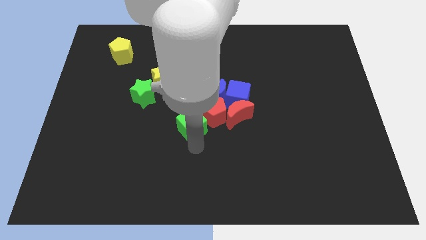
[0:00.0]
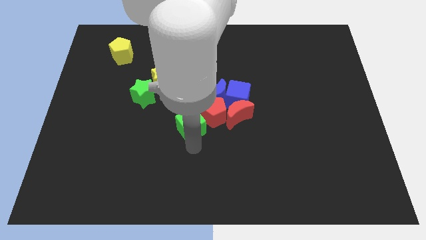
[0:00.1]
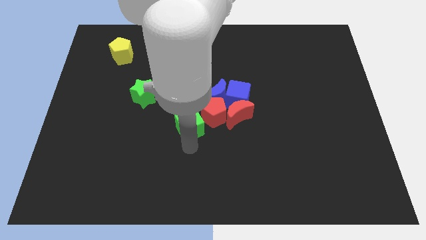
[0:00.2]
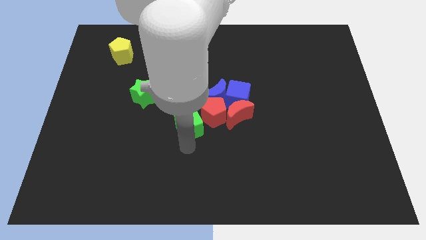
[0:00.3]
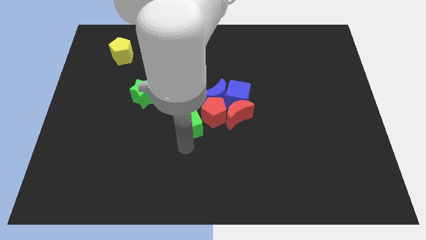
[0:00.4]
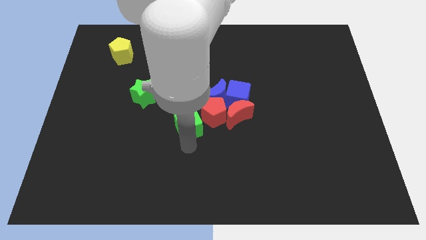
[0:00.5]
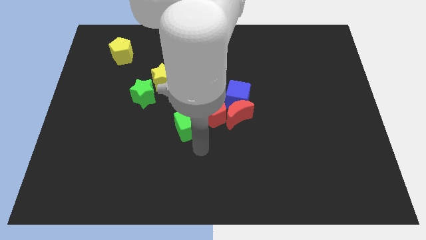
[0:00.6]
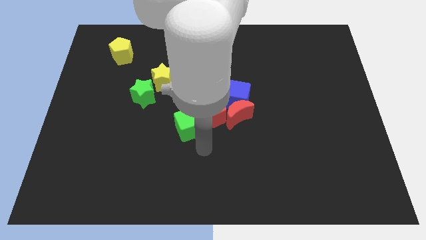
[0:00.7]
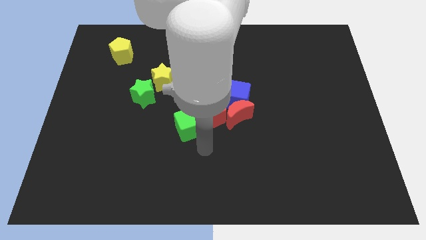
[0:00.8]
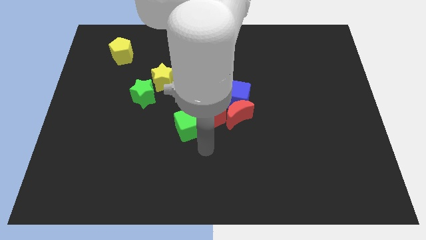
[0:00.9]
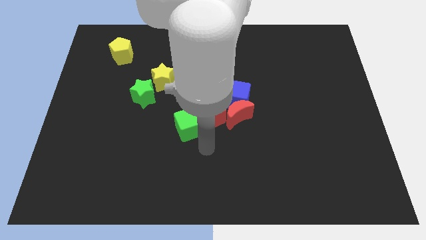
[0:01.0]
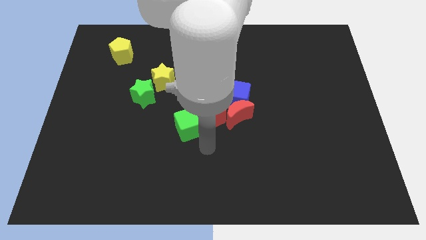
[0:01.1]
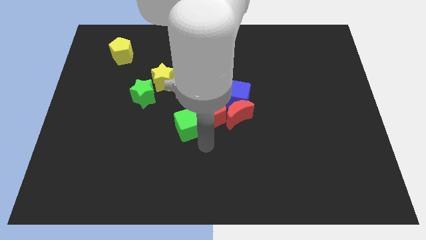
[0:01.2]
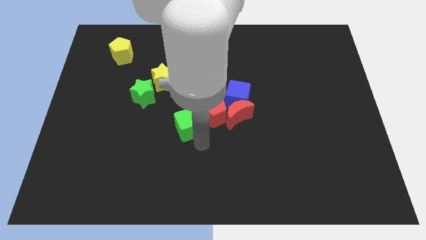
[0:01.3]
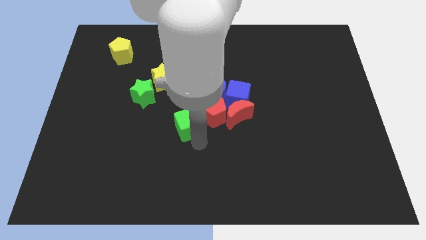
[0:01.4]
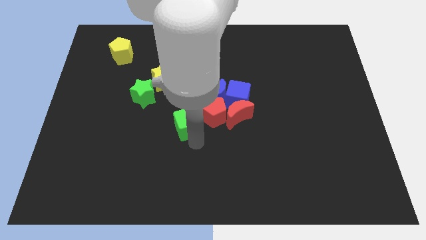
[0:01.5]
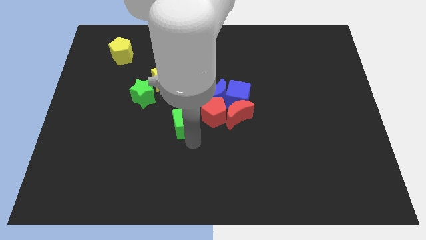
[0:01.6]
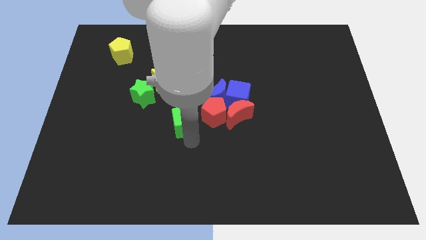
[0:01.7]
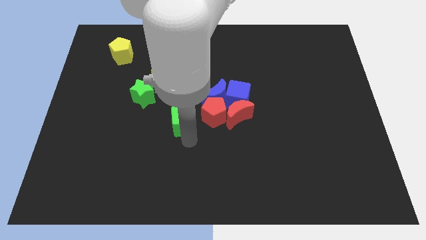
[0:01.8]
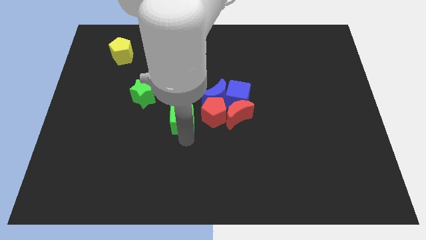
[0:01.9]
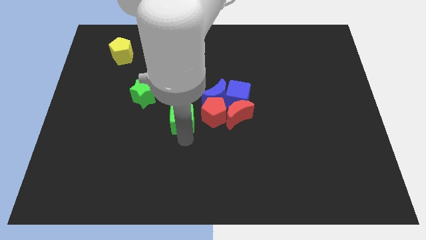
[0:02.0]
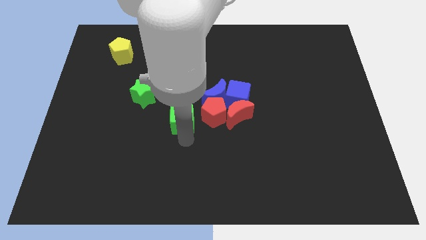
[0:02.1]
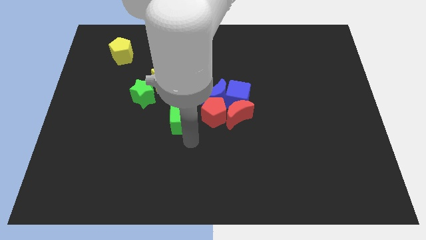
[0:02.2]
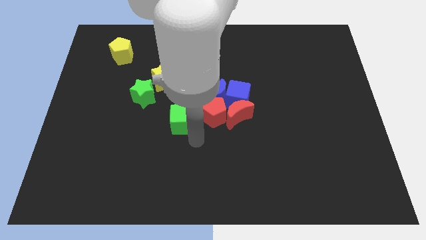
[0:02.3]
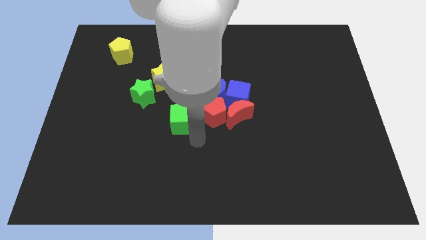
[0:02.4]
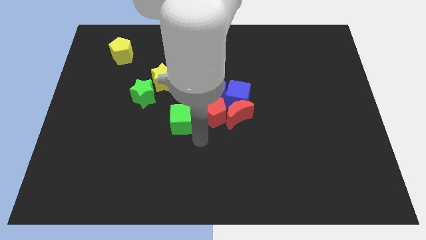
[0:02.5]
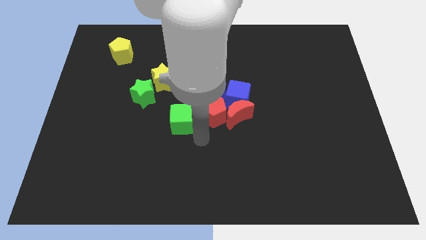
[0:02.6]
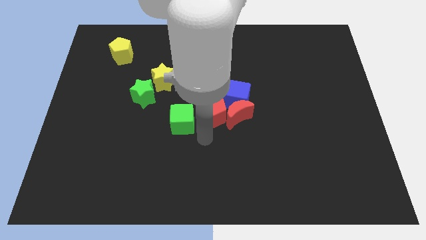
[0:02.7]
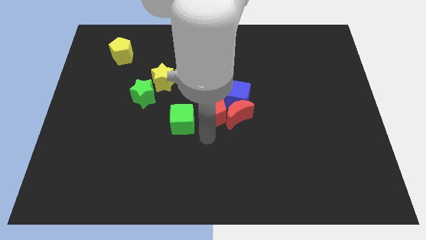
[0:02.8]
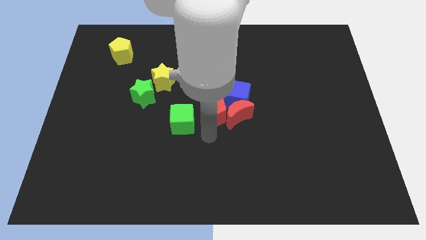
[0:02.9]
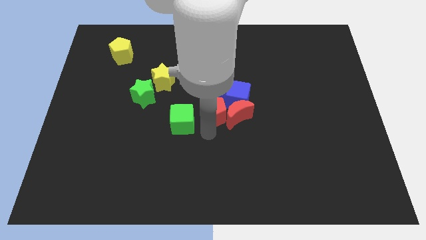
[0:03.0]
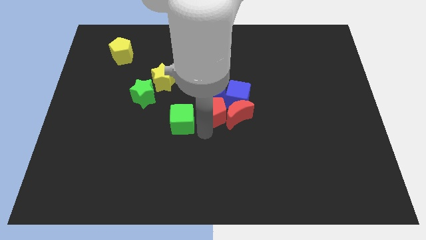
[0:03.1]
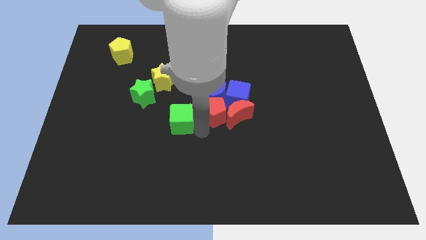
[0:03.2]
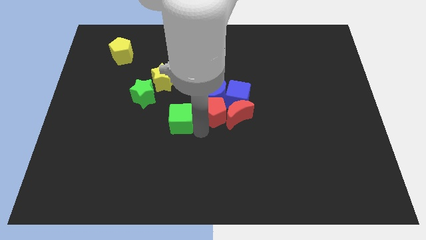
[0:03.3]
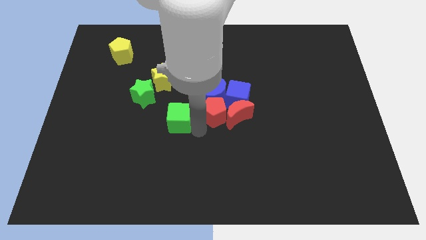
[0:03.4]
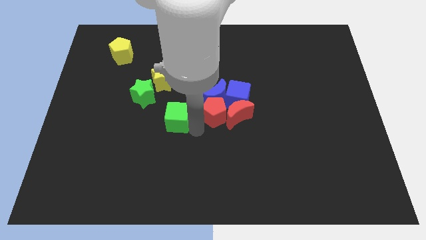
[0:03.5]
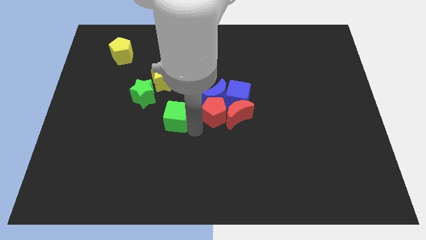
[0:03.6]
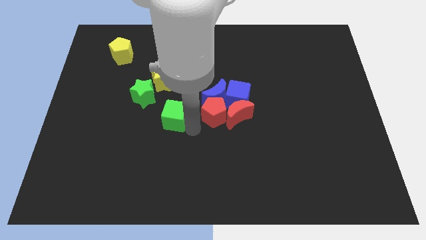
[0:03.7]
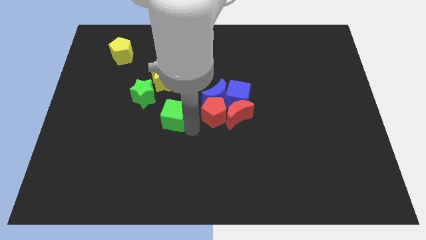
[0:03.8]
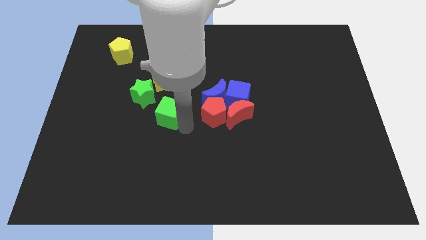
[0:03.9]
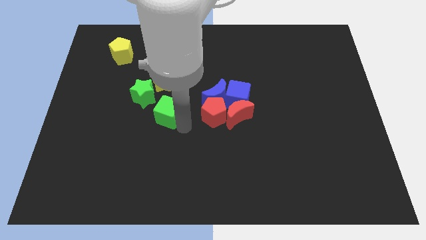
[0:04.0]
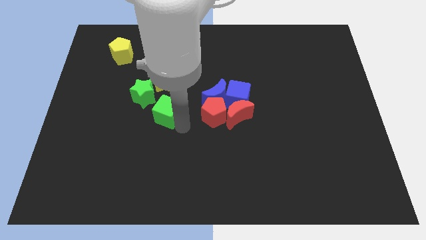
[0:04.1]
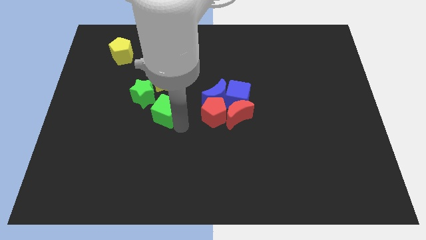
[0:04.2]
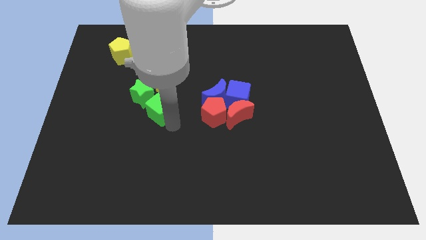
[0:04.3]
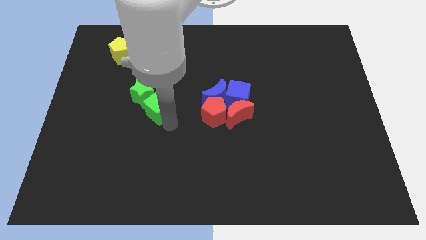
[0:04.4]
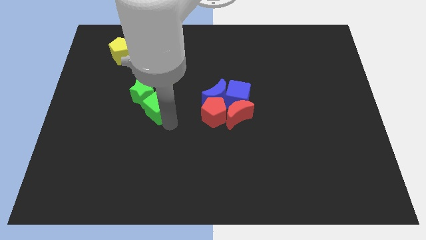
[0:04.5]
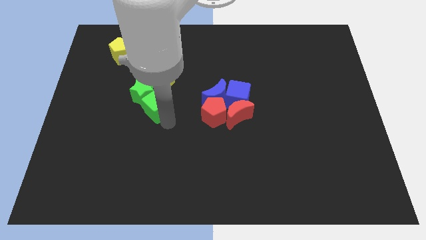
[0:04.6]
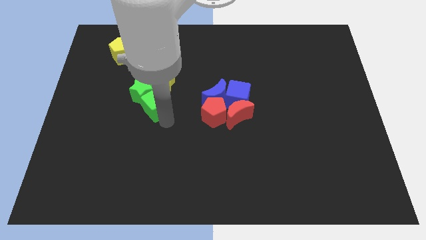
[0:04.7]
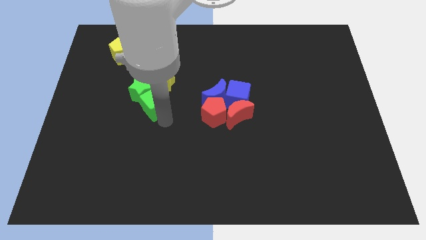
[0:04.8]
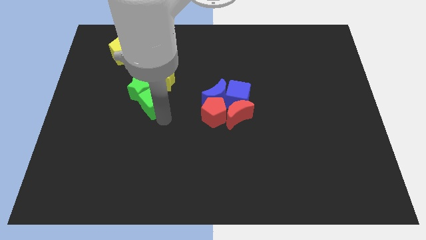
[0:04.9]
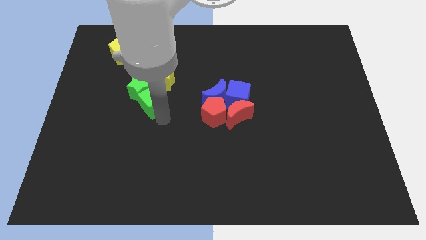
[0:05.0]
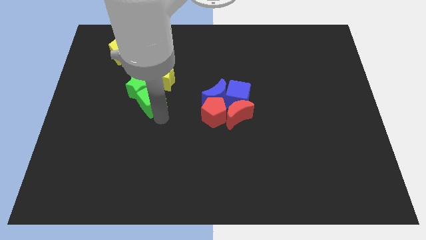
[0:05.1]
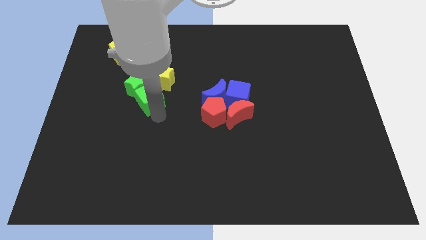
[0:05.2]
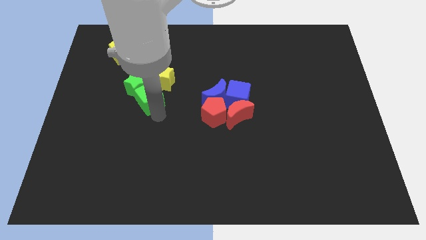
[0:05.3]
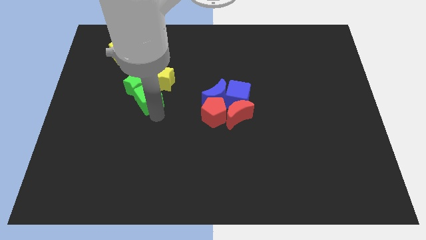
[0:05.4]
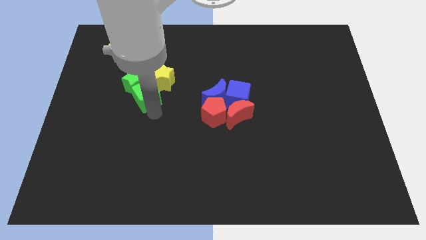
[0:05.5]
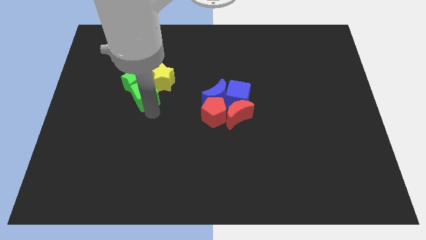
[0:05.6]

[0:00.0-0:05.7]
move the green cube below the green star

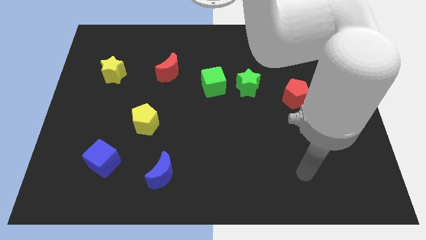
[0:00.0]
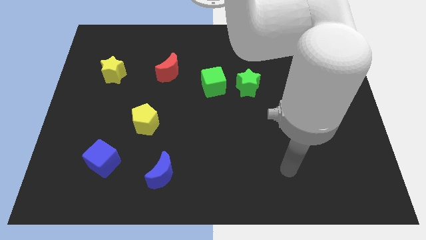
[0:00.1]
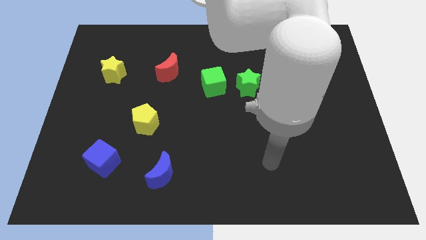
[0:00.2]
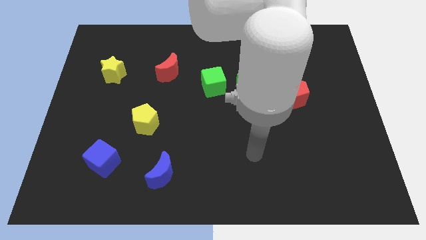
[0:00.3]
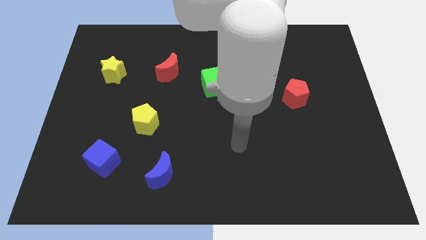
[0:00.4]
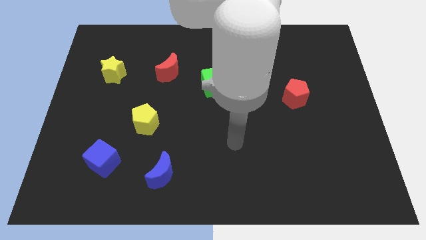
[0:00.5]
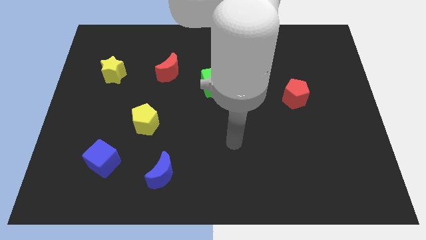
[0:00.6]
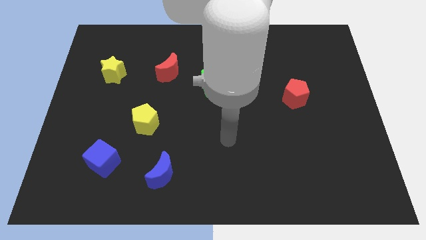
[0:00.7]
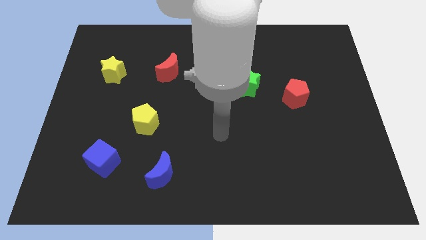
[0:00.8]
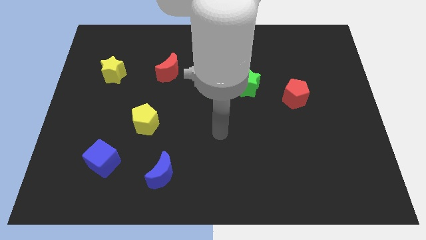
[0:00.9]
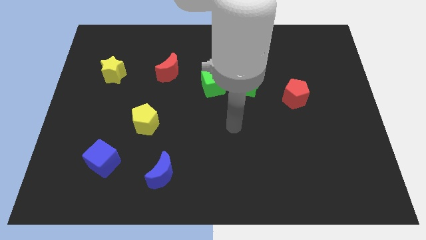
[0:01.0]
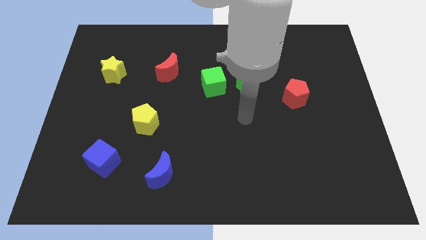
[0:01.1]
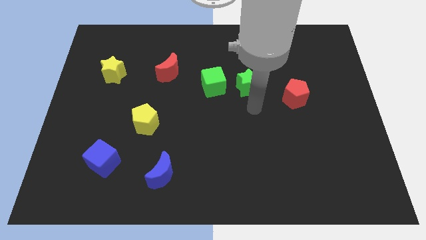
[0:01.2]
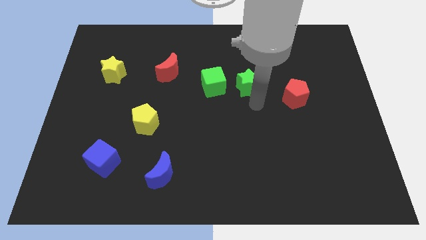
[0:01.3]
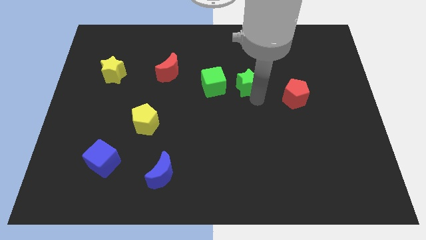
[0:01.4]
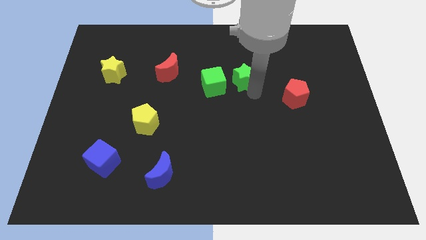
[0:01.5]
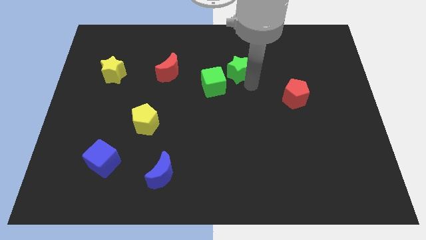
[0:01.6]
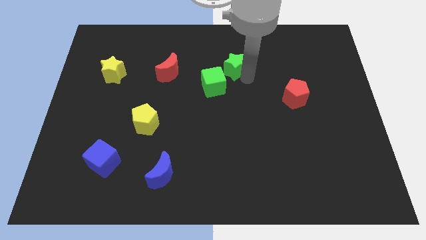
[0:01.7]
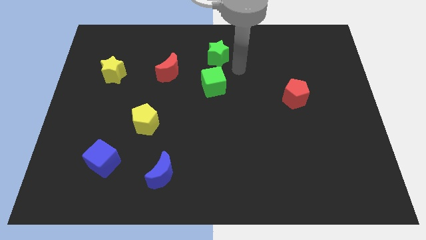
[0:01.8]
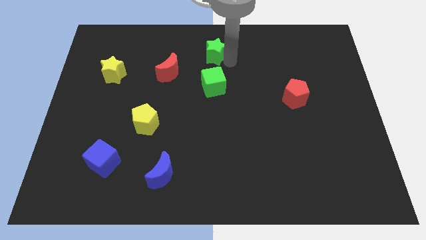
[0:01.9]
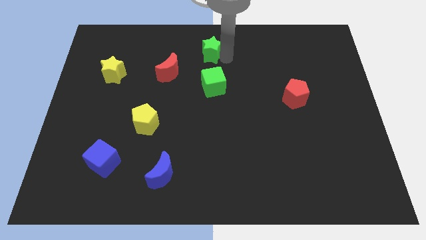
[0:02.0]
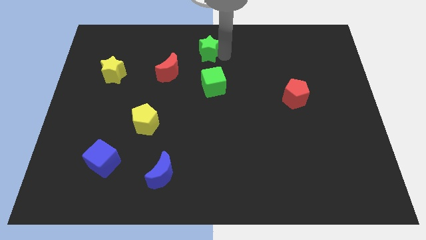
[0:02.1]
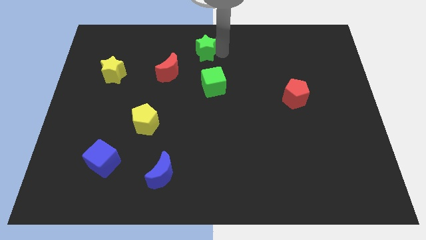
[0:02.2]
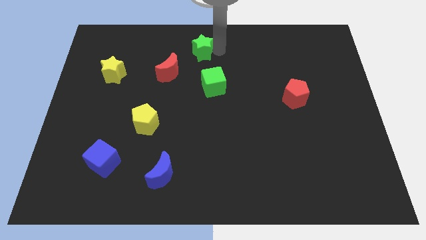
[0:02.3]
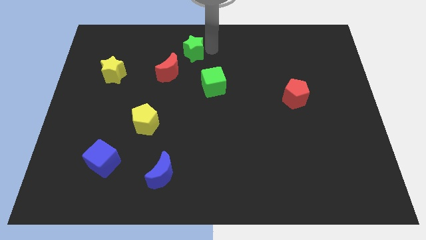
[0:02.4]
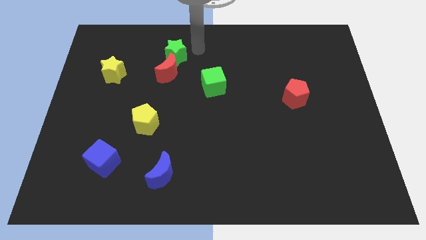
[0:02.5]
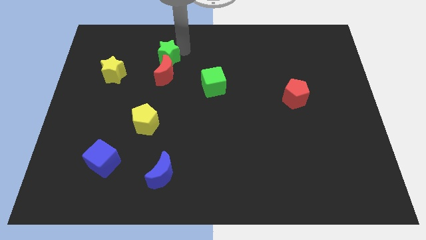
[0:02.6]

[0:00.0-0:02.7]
push the green star to the top of the red crescent

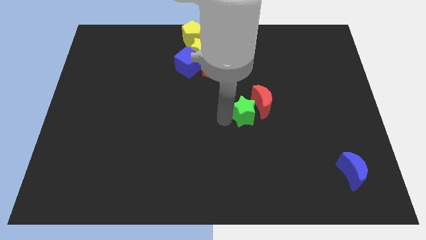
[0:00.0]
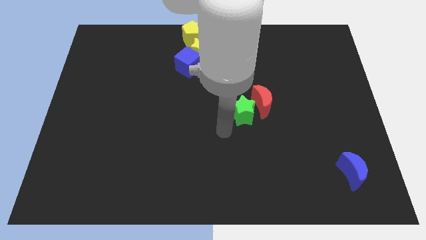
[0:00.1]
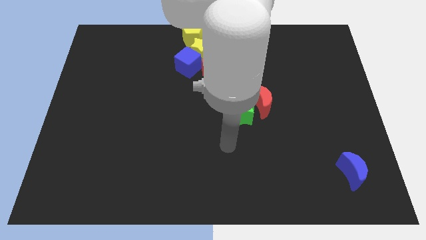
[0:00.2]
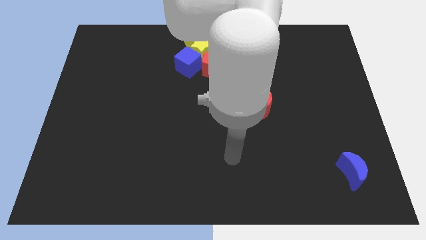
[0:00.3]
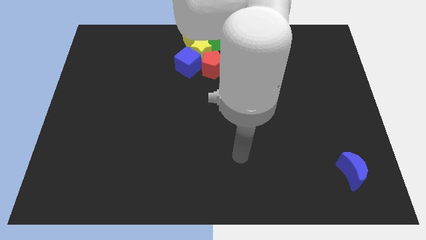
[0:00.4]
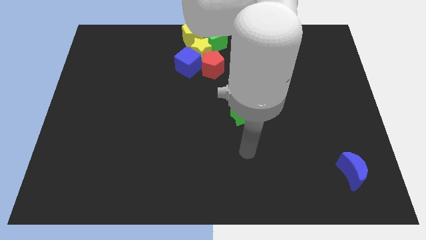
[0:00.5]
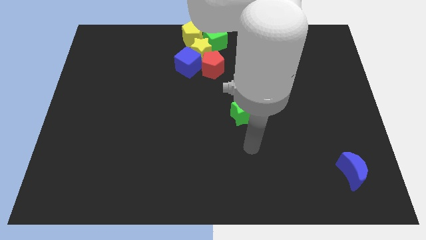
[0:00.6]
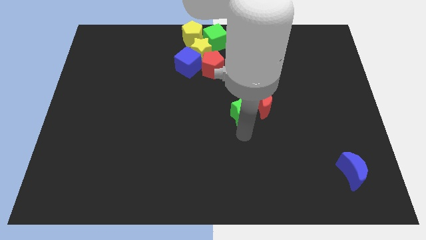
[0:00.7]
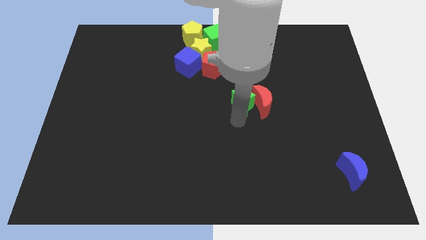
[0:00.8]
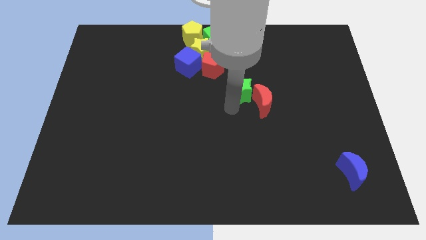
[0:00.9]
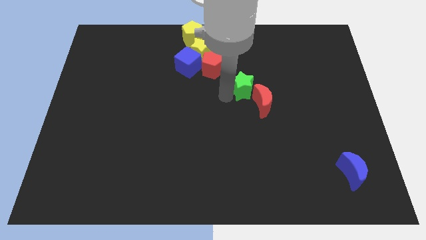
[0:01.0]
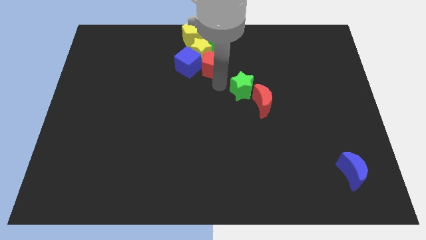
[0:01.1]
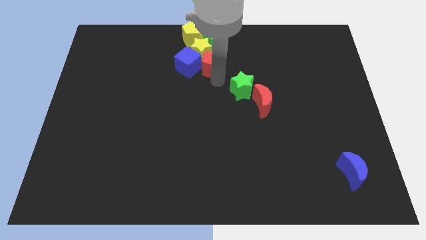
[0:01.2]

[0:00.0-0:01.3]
move the green star to the top of the red crescent
